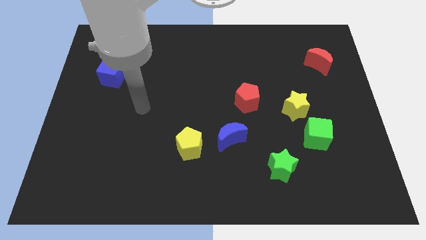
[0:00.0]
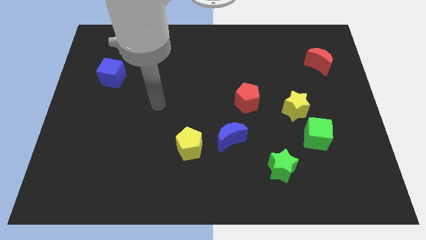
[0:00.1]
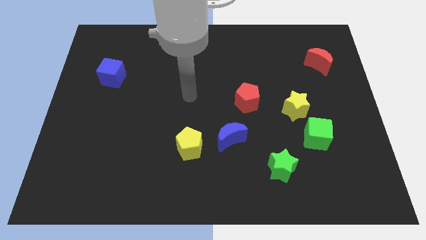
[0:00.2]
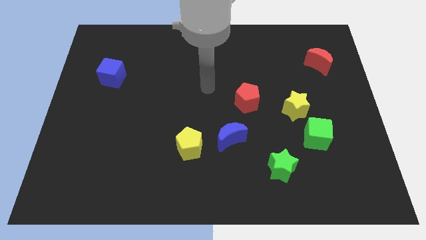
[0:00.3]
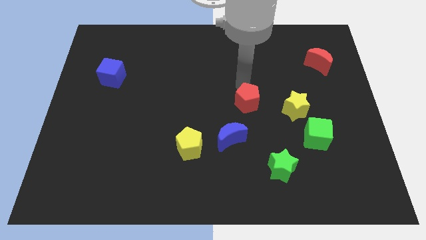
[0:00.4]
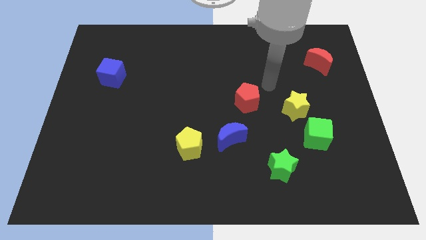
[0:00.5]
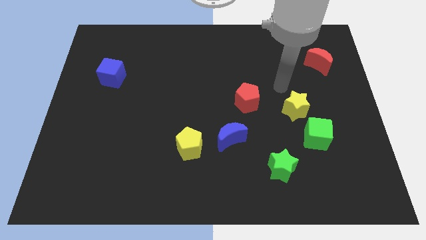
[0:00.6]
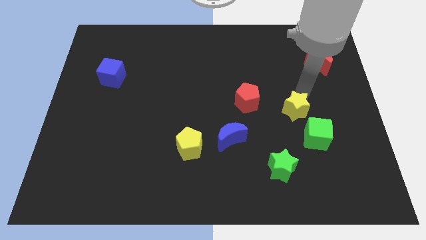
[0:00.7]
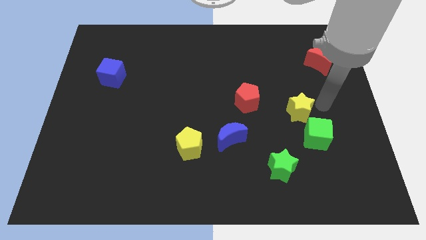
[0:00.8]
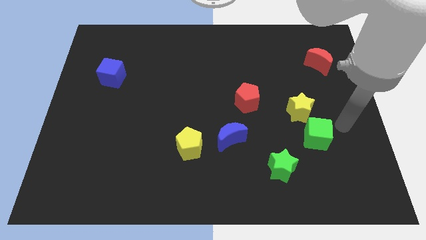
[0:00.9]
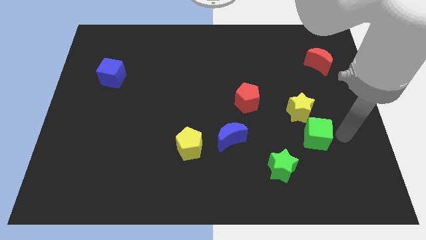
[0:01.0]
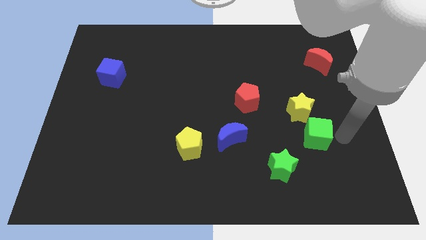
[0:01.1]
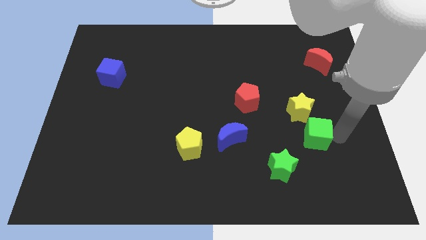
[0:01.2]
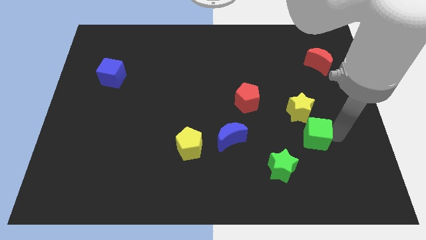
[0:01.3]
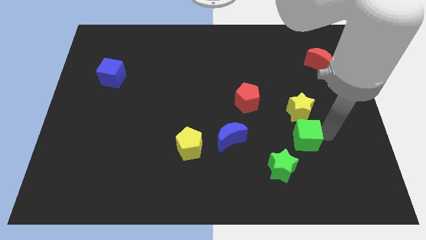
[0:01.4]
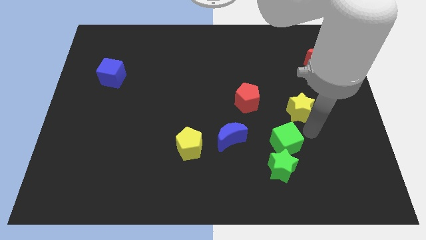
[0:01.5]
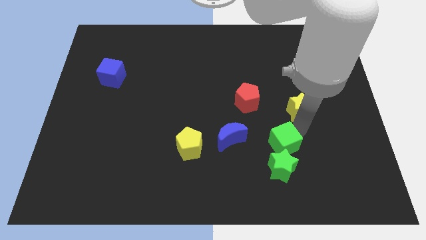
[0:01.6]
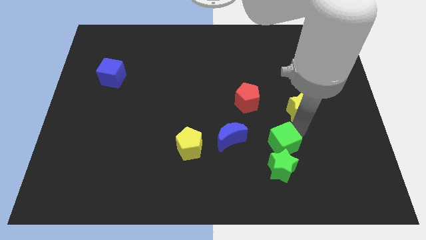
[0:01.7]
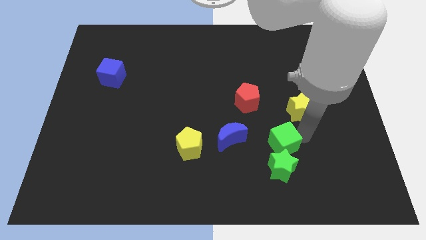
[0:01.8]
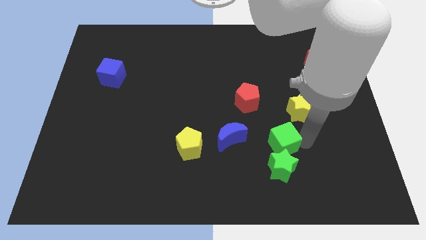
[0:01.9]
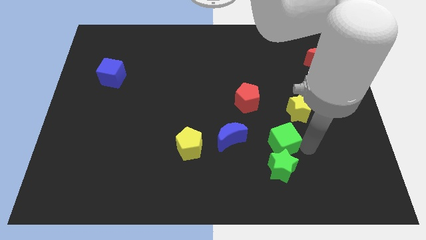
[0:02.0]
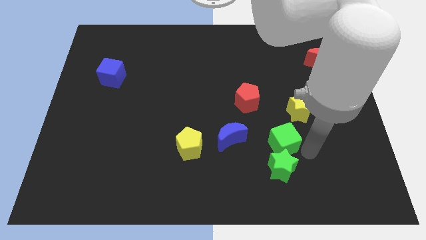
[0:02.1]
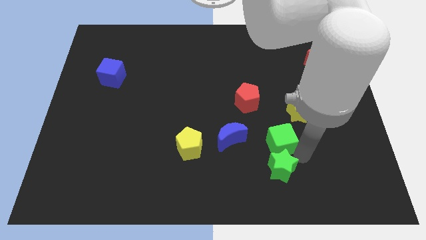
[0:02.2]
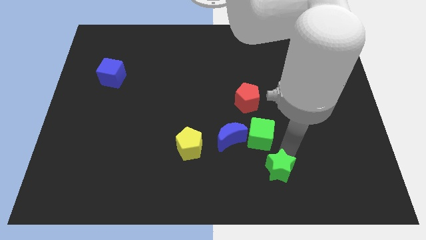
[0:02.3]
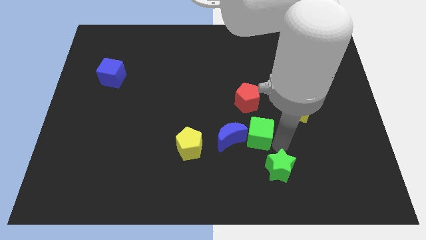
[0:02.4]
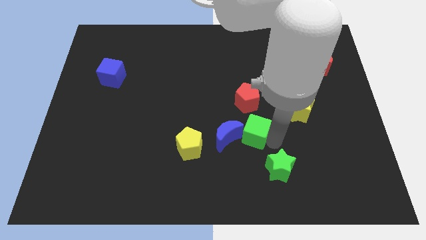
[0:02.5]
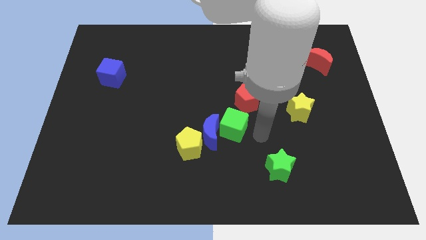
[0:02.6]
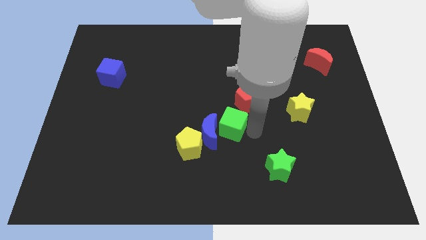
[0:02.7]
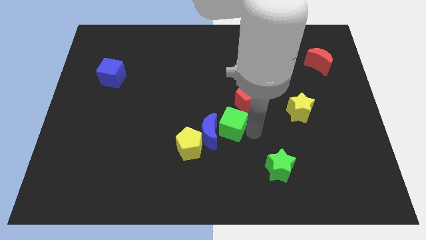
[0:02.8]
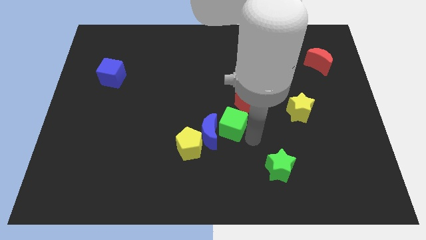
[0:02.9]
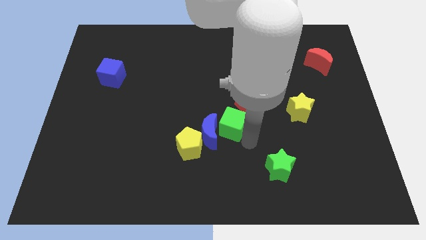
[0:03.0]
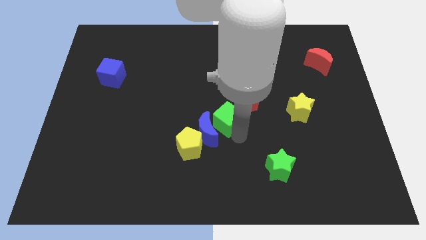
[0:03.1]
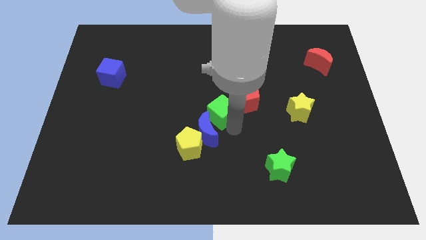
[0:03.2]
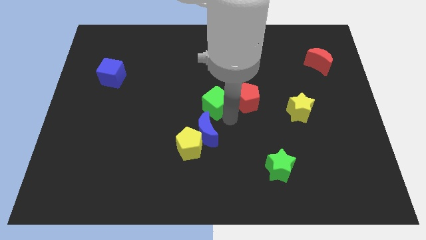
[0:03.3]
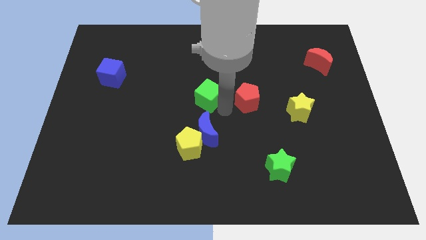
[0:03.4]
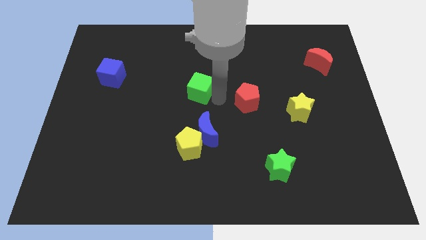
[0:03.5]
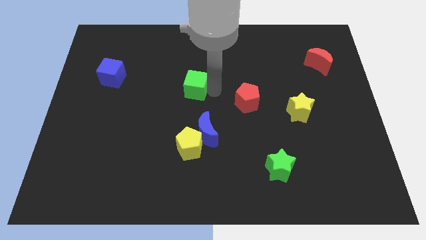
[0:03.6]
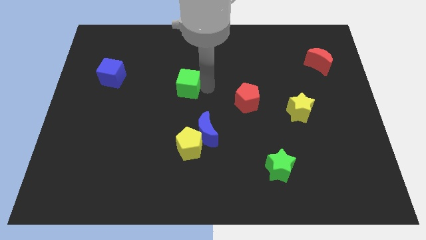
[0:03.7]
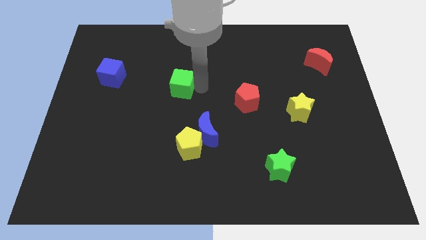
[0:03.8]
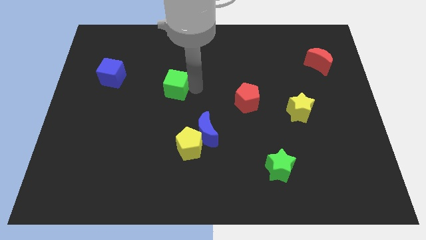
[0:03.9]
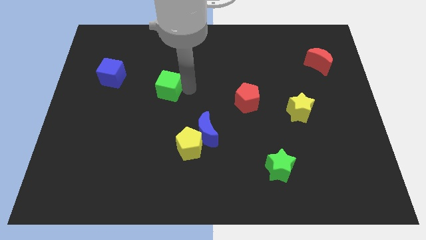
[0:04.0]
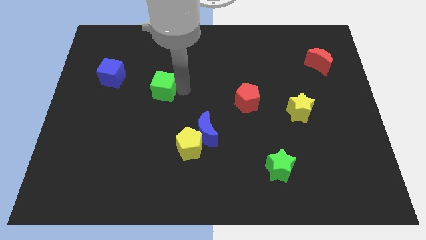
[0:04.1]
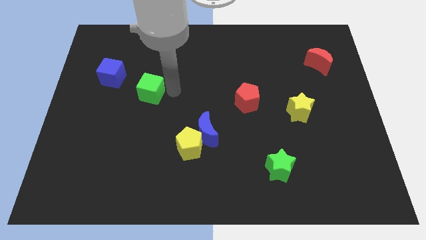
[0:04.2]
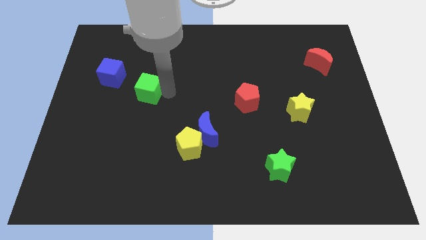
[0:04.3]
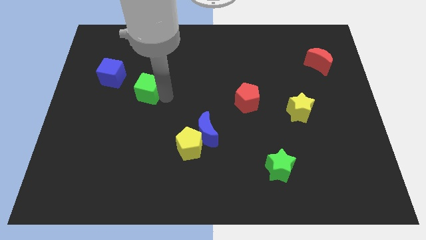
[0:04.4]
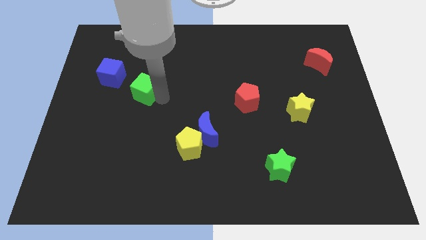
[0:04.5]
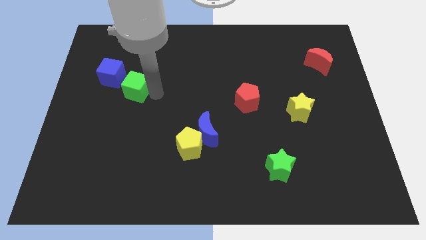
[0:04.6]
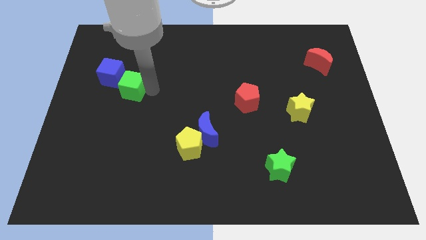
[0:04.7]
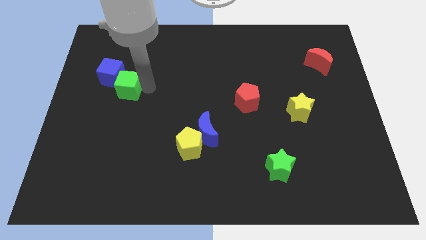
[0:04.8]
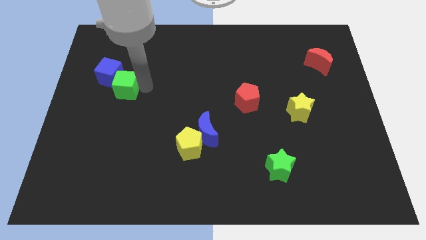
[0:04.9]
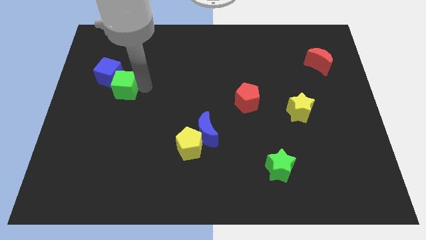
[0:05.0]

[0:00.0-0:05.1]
push the green cube next to the blue cube

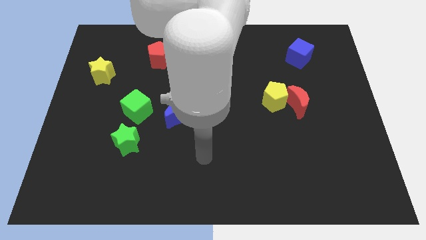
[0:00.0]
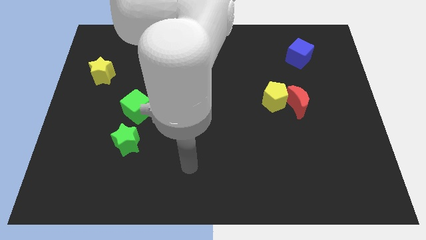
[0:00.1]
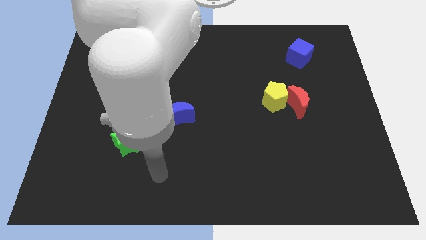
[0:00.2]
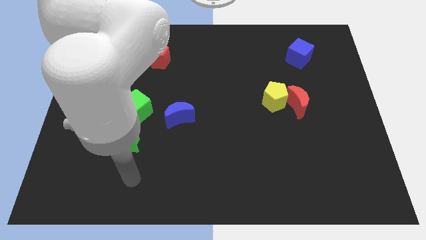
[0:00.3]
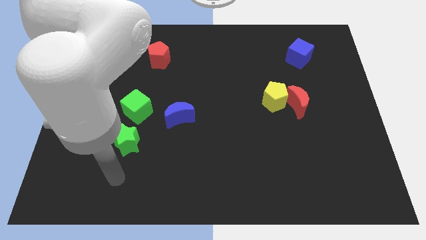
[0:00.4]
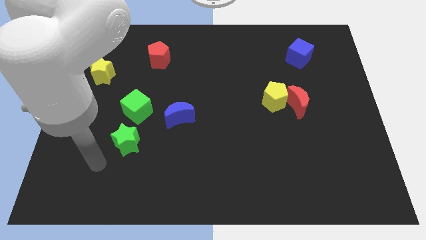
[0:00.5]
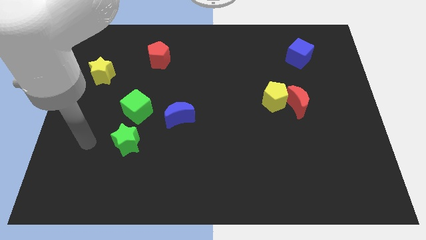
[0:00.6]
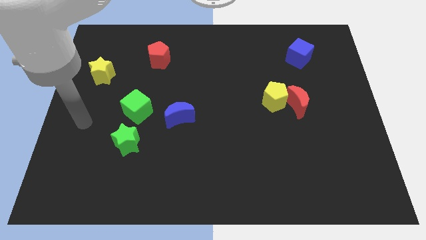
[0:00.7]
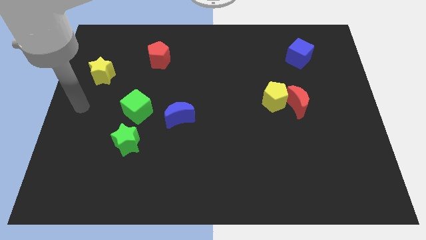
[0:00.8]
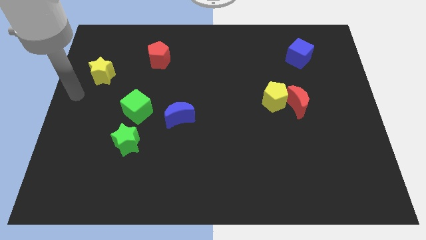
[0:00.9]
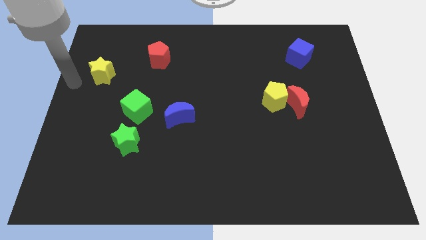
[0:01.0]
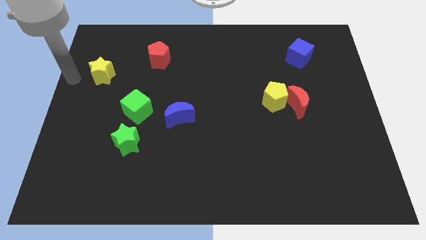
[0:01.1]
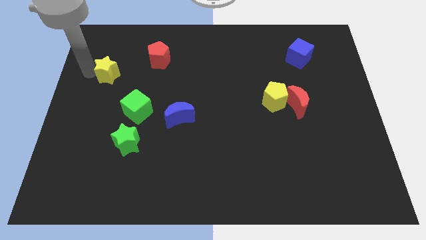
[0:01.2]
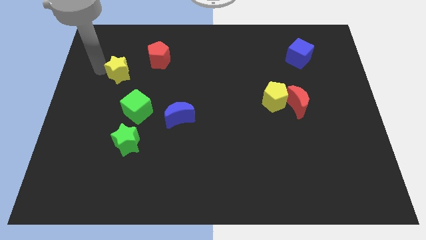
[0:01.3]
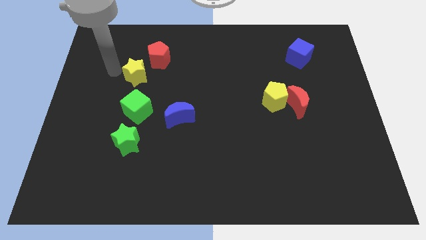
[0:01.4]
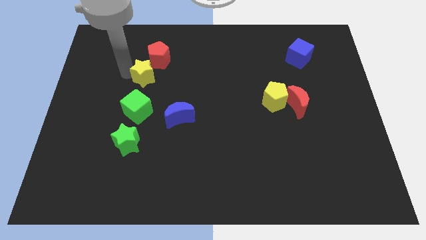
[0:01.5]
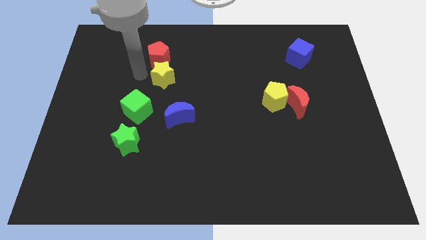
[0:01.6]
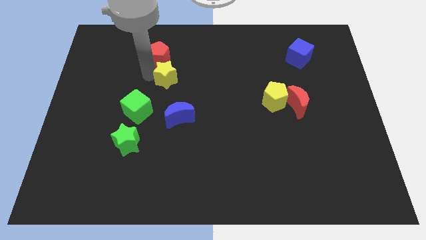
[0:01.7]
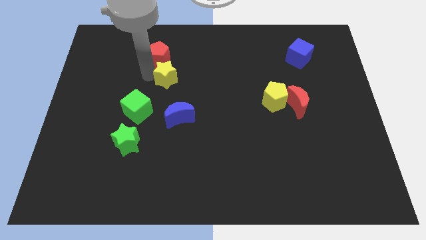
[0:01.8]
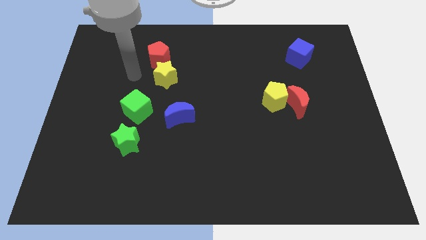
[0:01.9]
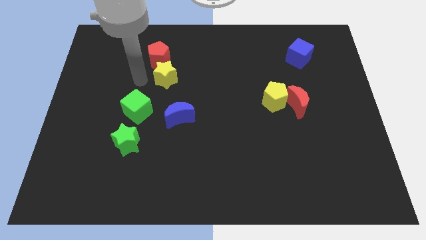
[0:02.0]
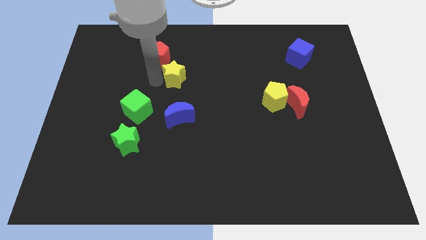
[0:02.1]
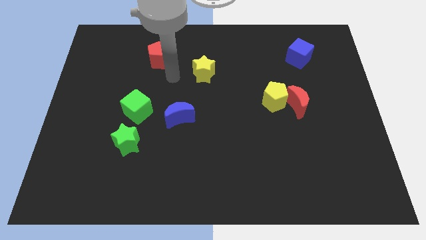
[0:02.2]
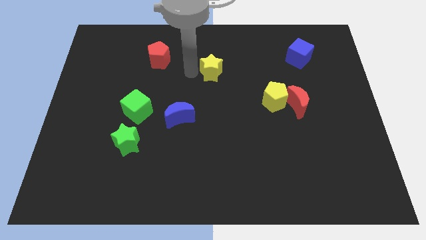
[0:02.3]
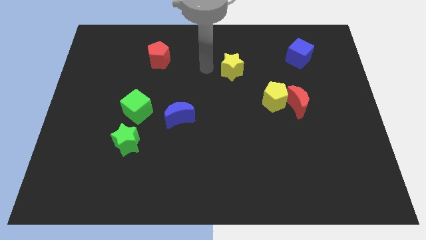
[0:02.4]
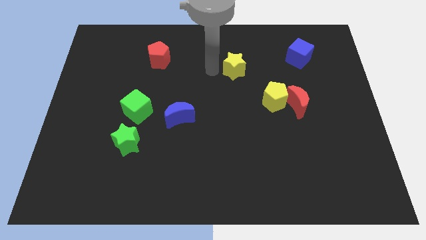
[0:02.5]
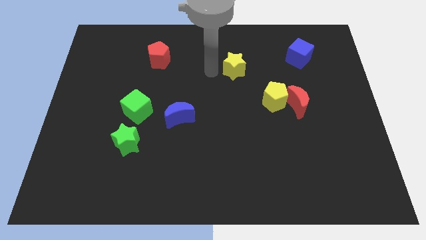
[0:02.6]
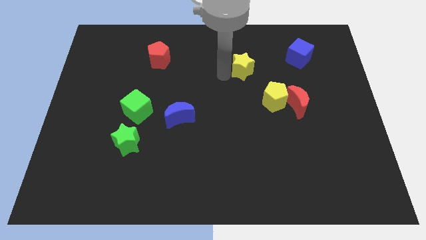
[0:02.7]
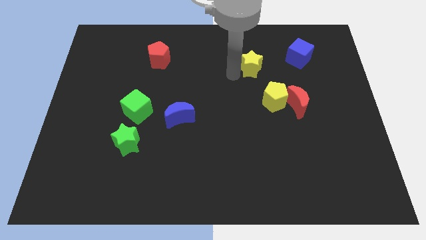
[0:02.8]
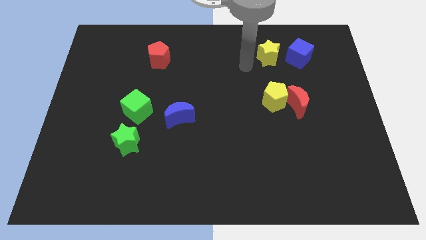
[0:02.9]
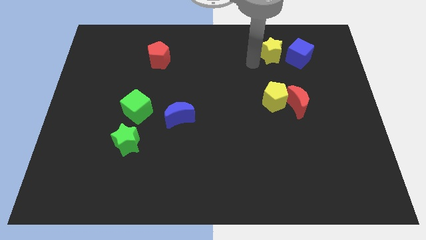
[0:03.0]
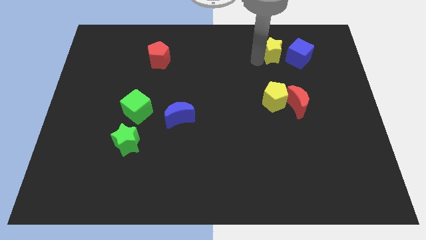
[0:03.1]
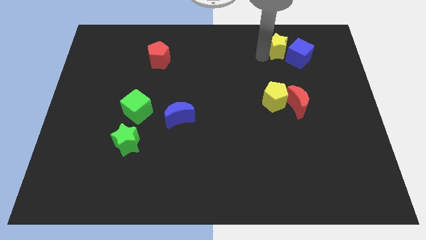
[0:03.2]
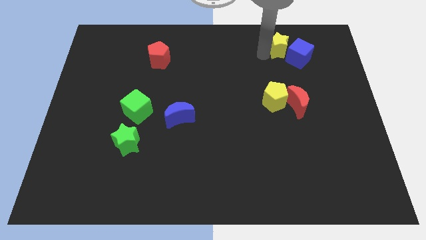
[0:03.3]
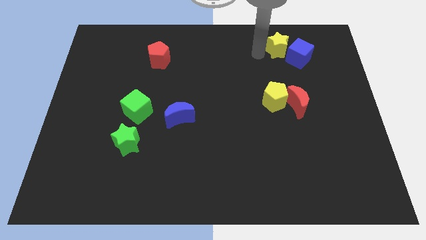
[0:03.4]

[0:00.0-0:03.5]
slide the yellow star towards the blue cube
